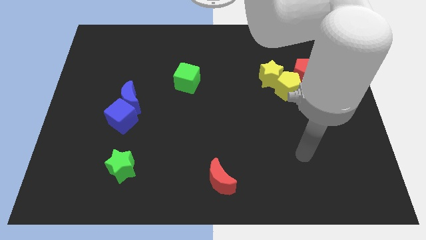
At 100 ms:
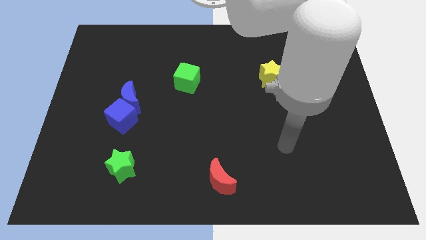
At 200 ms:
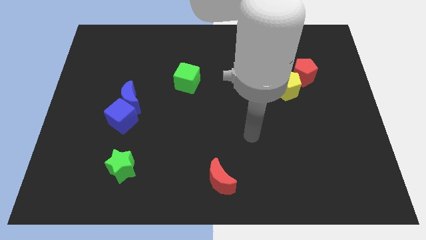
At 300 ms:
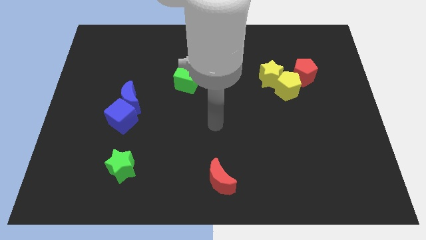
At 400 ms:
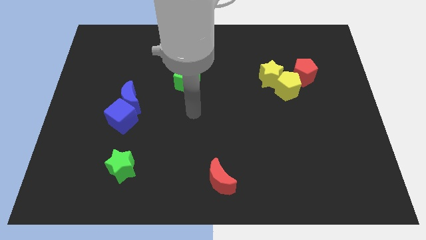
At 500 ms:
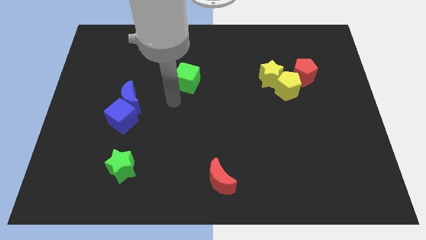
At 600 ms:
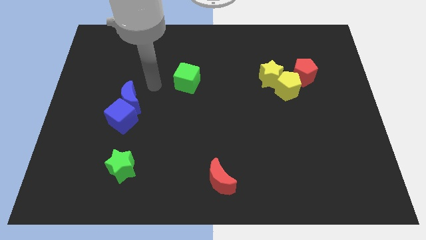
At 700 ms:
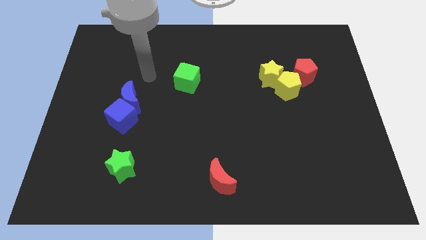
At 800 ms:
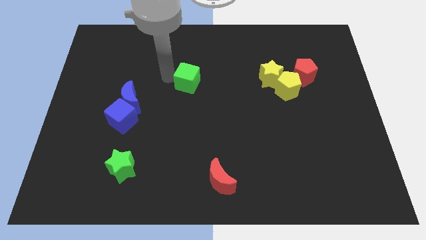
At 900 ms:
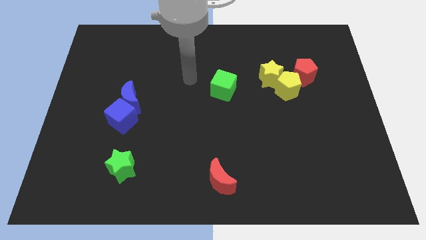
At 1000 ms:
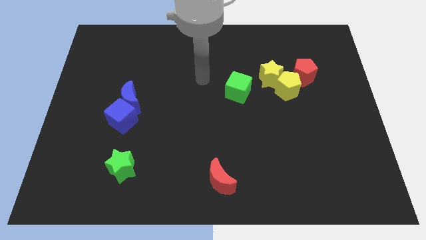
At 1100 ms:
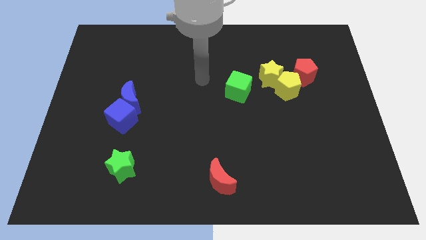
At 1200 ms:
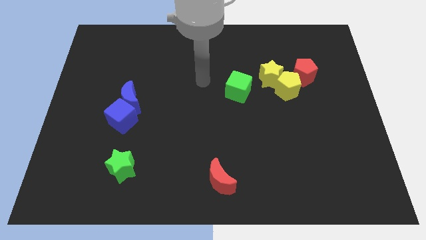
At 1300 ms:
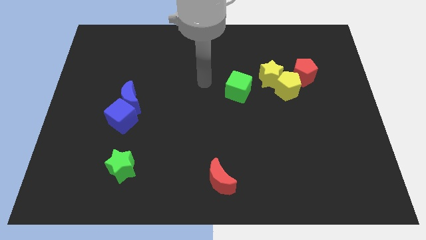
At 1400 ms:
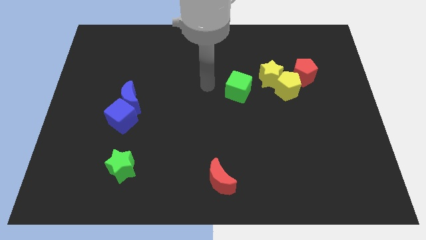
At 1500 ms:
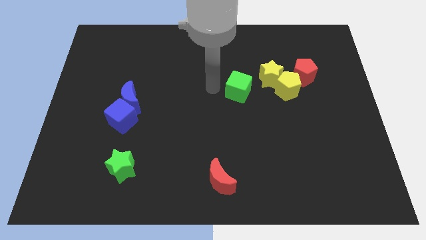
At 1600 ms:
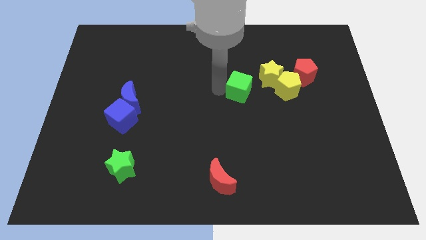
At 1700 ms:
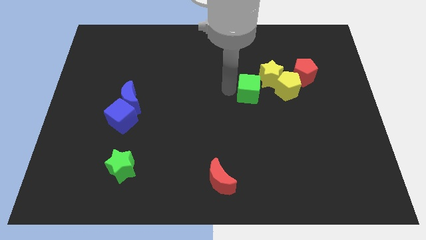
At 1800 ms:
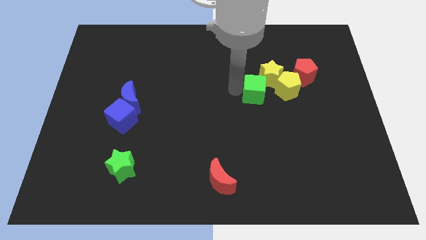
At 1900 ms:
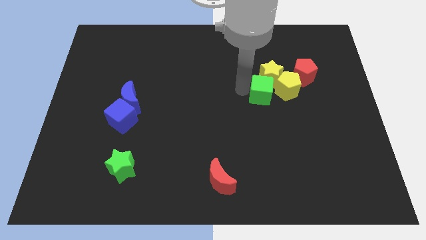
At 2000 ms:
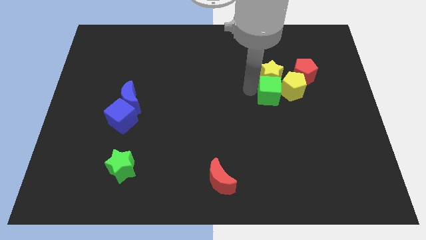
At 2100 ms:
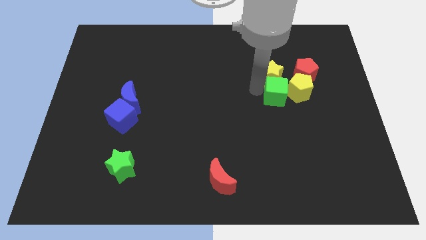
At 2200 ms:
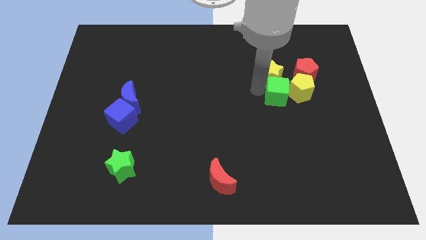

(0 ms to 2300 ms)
slide the green cube close to the yellow pentagon

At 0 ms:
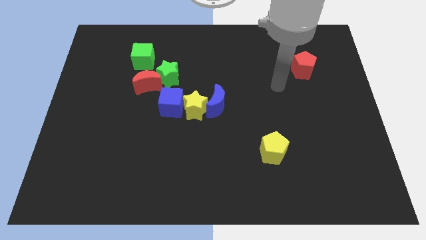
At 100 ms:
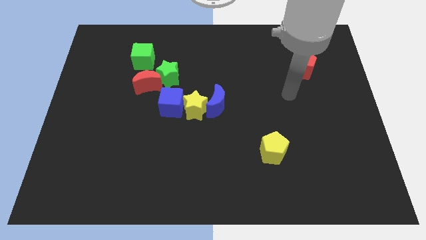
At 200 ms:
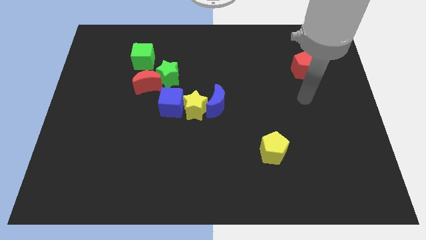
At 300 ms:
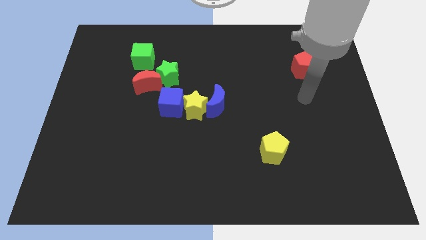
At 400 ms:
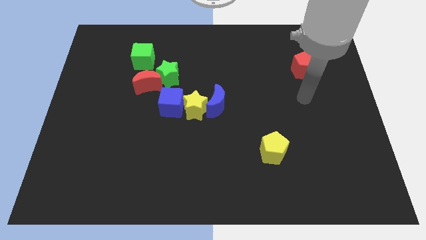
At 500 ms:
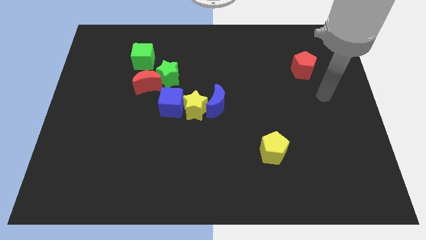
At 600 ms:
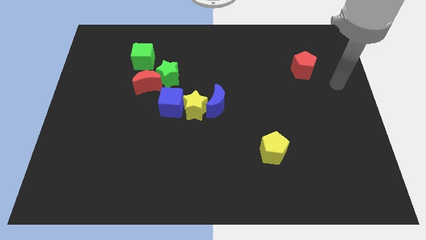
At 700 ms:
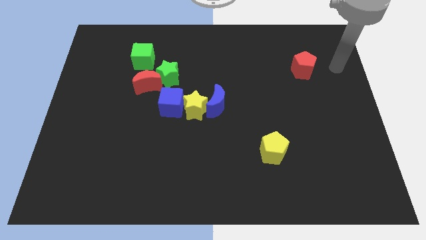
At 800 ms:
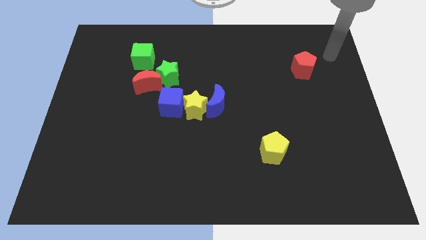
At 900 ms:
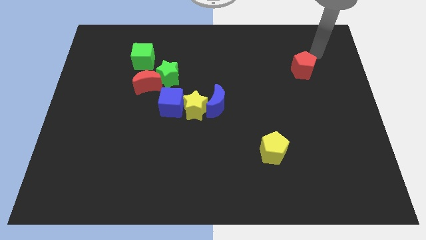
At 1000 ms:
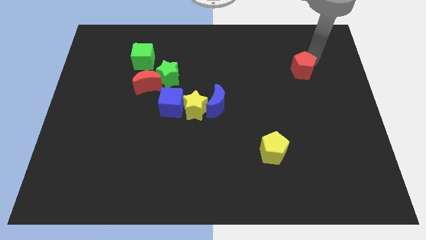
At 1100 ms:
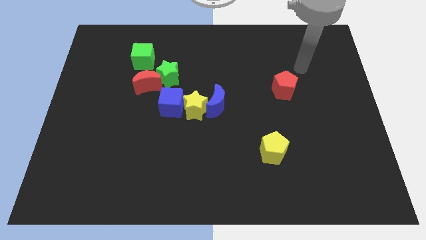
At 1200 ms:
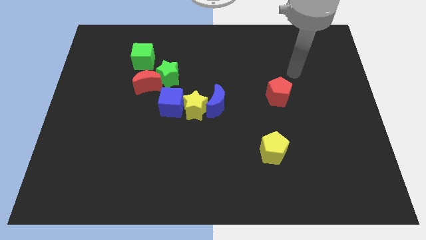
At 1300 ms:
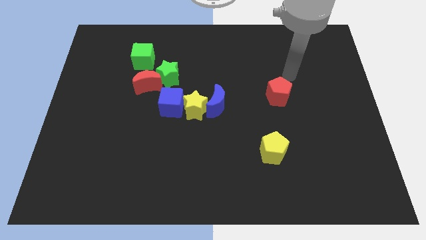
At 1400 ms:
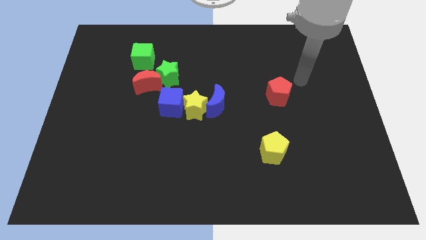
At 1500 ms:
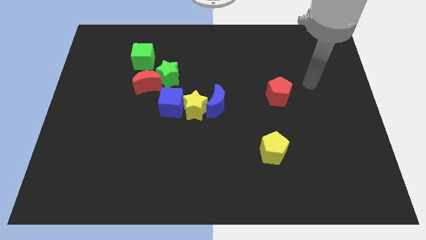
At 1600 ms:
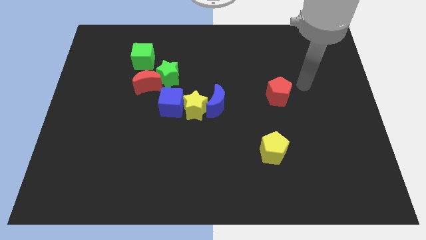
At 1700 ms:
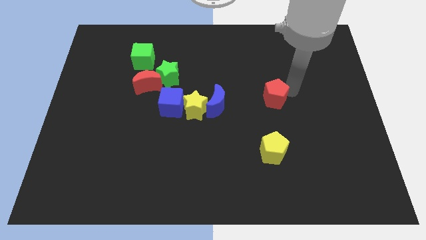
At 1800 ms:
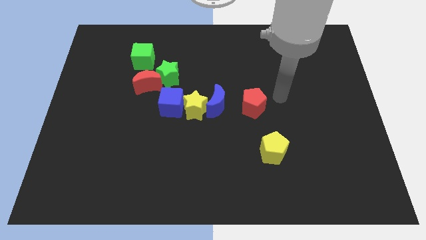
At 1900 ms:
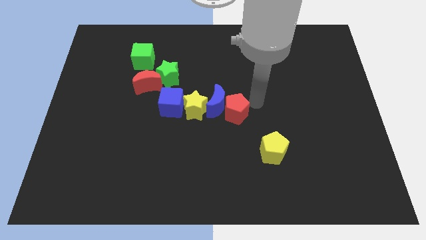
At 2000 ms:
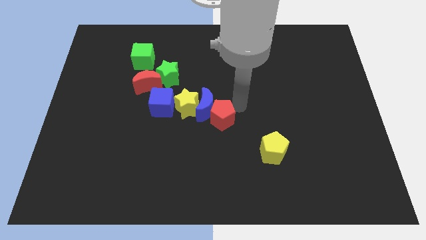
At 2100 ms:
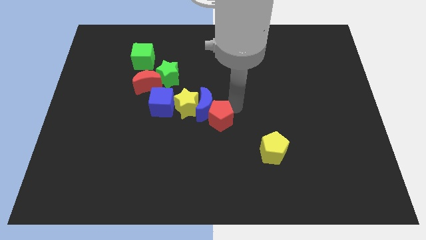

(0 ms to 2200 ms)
put the red pentagon close to the blue moon

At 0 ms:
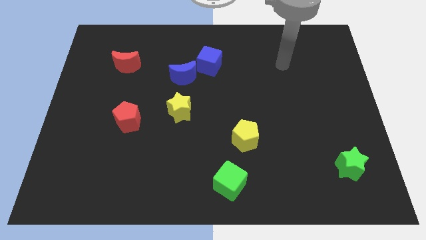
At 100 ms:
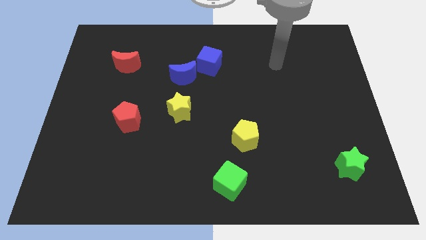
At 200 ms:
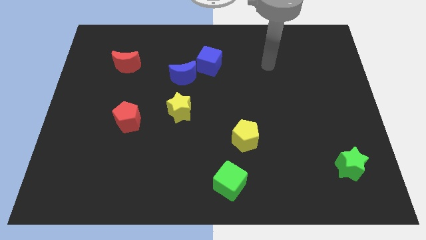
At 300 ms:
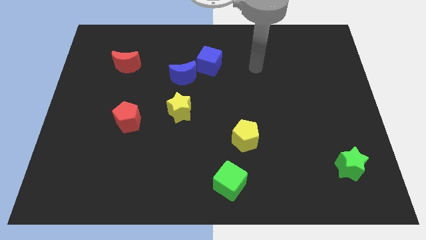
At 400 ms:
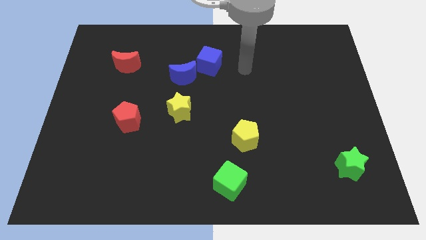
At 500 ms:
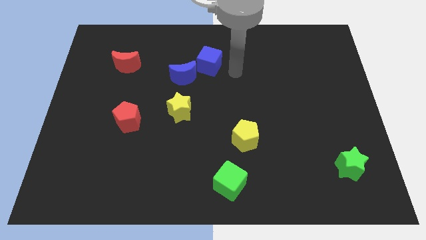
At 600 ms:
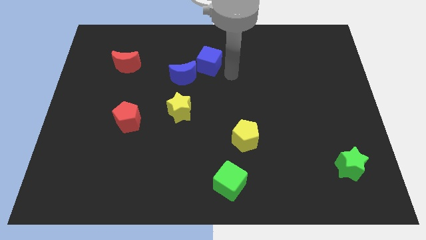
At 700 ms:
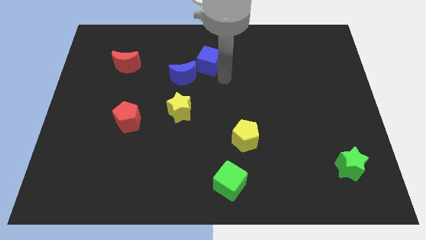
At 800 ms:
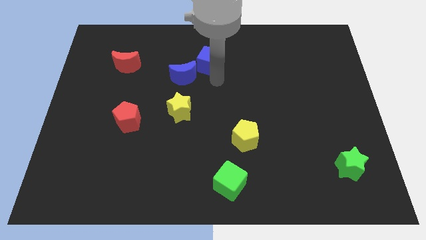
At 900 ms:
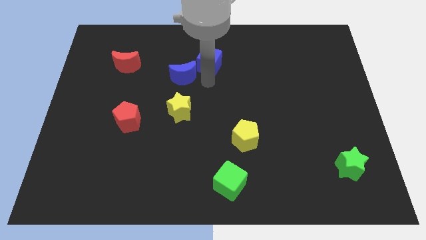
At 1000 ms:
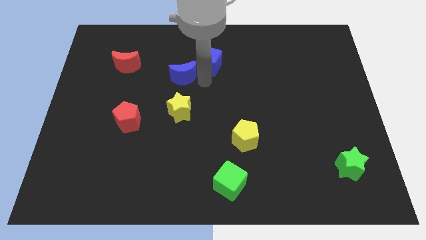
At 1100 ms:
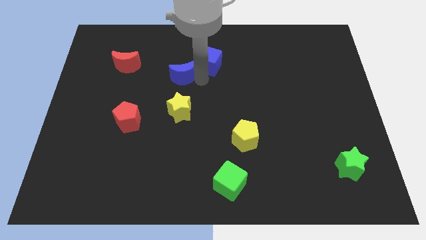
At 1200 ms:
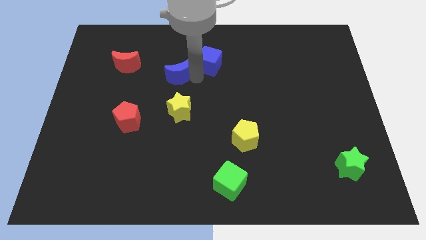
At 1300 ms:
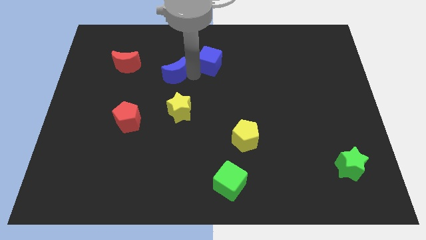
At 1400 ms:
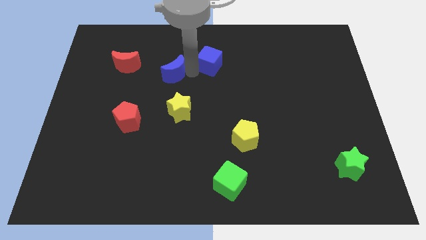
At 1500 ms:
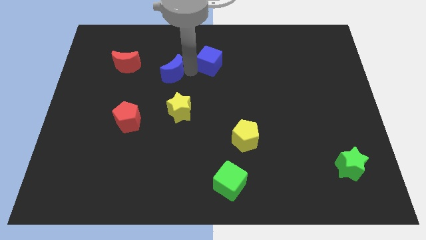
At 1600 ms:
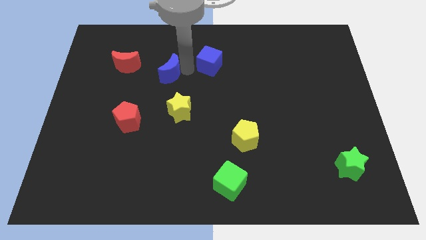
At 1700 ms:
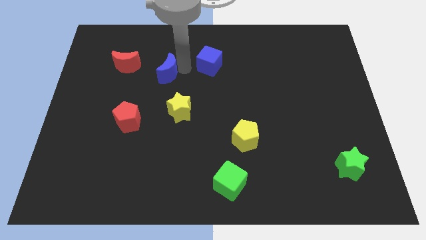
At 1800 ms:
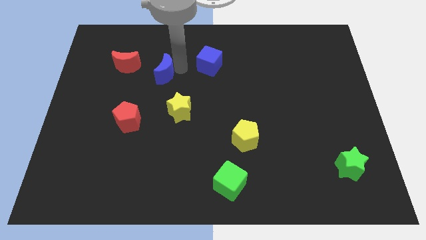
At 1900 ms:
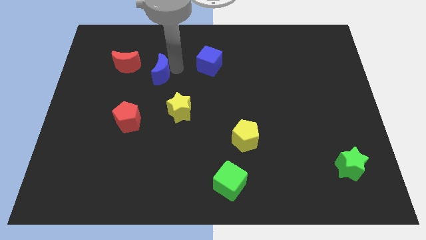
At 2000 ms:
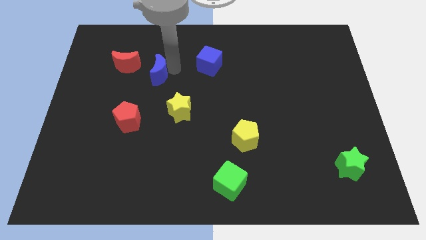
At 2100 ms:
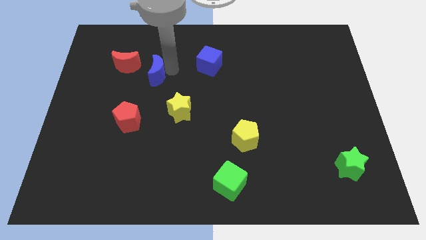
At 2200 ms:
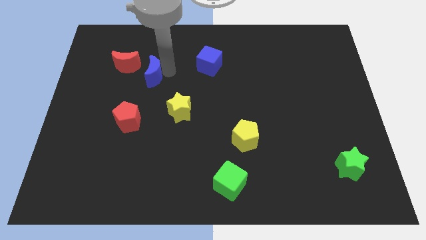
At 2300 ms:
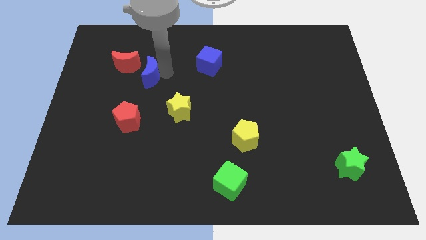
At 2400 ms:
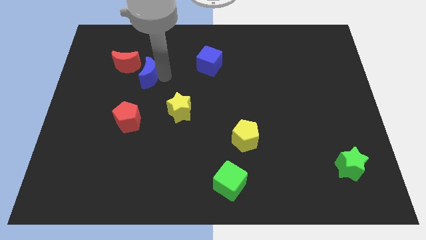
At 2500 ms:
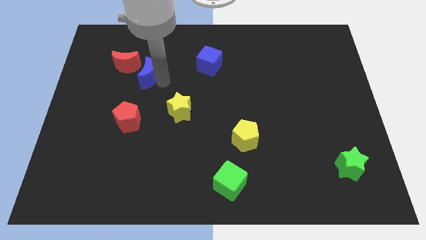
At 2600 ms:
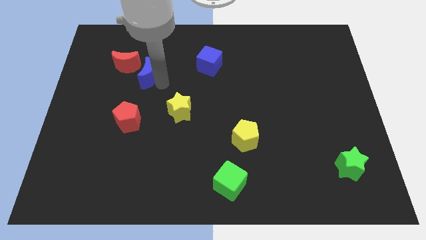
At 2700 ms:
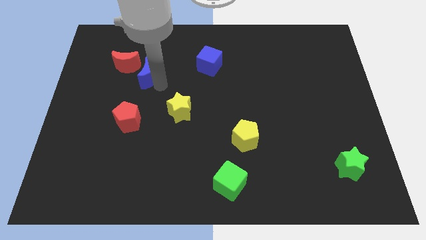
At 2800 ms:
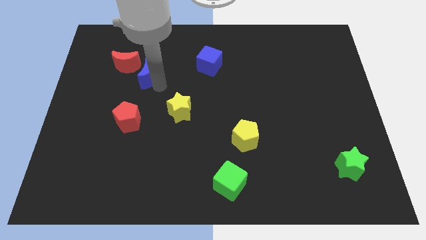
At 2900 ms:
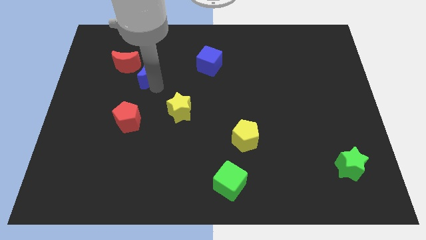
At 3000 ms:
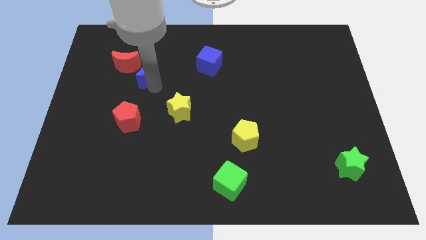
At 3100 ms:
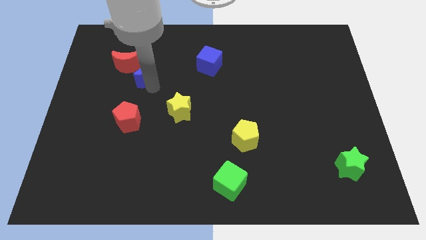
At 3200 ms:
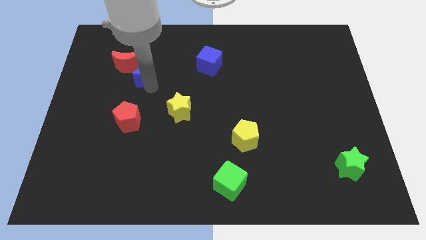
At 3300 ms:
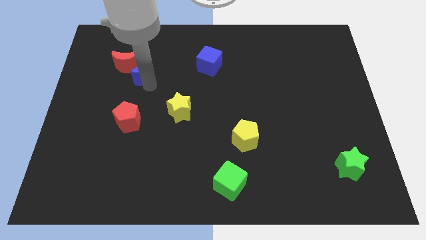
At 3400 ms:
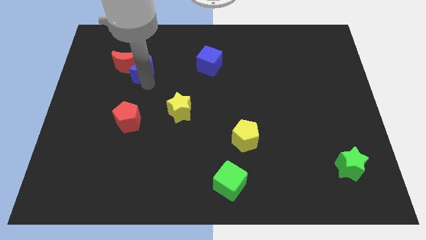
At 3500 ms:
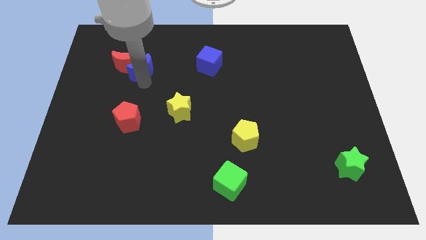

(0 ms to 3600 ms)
push the blue moon close to the red moon

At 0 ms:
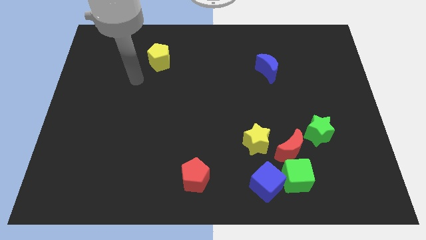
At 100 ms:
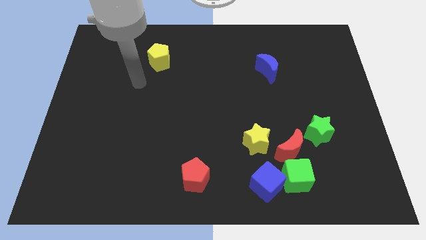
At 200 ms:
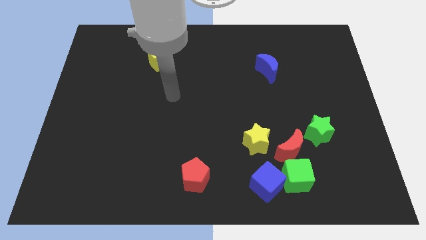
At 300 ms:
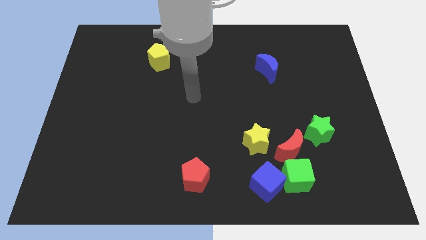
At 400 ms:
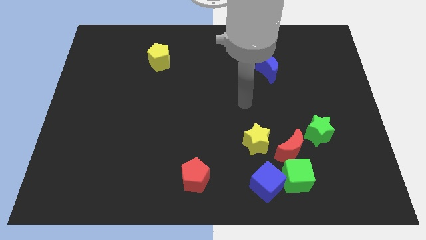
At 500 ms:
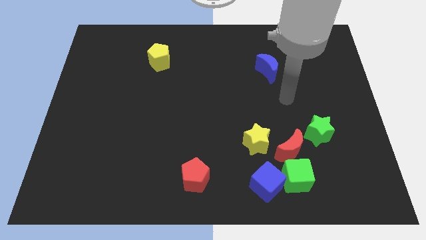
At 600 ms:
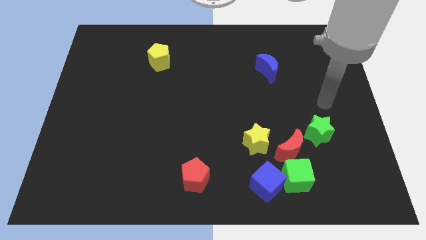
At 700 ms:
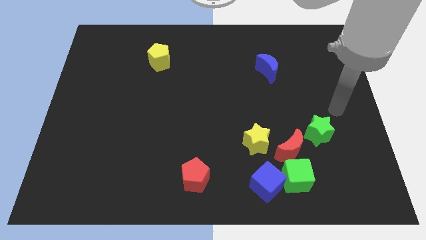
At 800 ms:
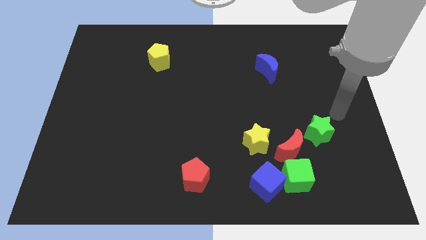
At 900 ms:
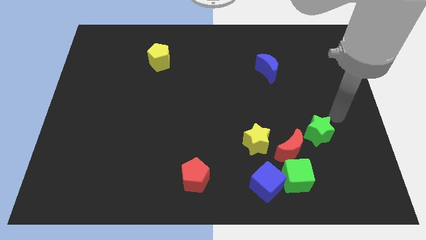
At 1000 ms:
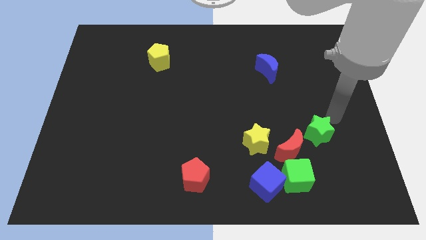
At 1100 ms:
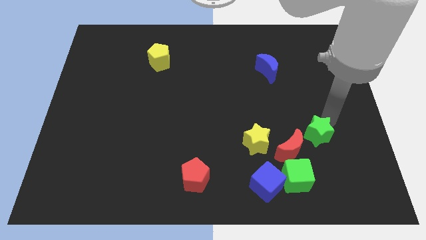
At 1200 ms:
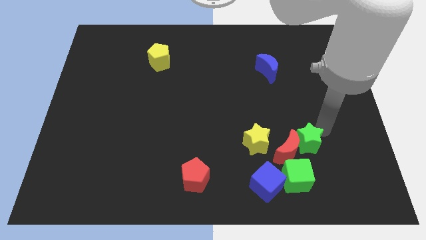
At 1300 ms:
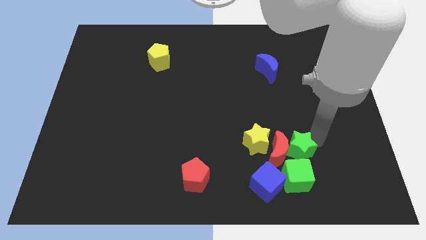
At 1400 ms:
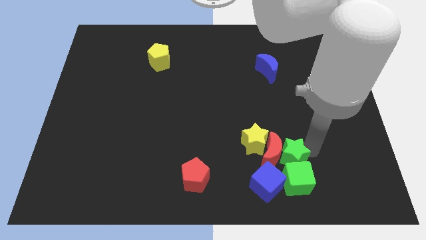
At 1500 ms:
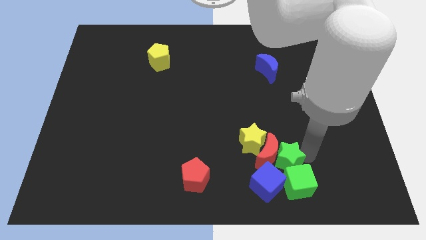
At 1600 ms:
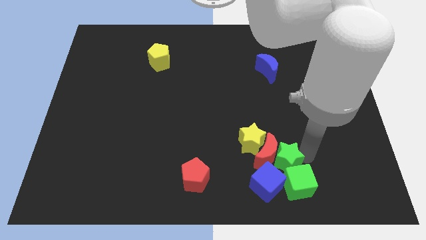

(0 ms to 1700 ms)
push the green star to the green cube
